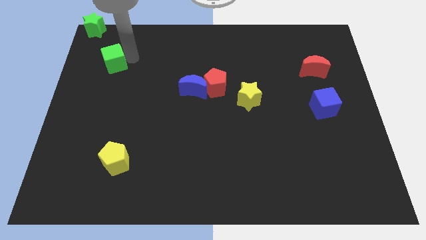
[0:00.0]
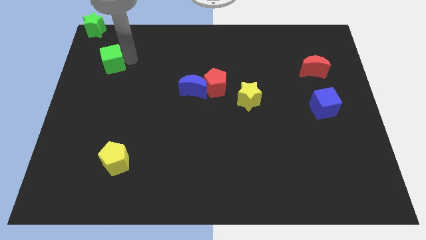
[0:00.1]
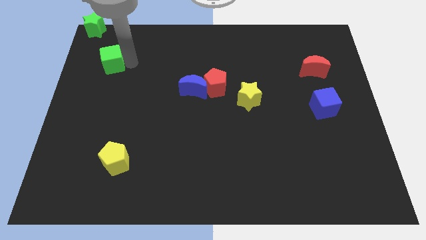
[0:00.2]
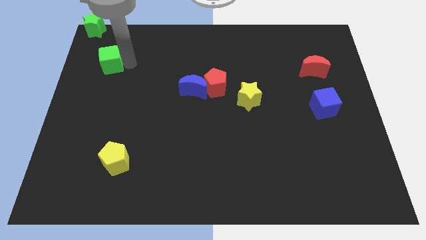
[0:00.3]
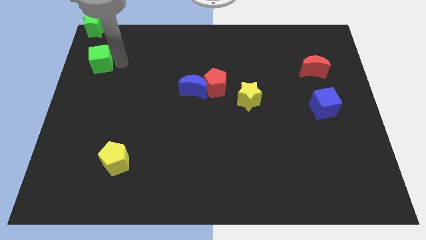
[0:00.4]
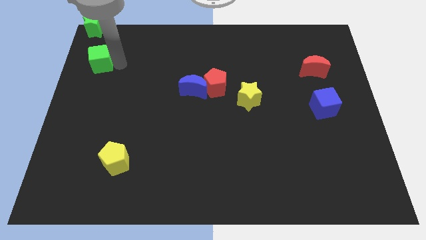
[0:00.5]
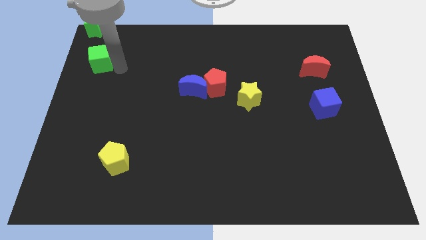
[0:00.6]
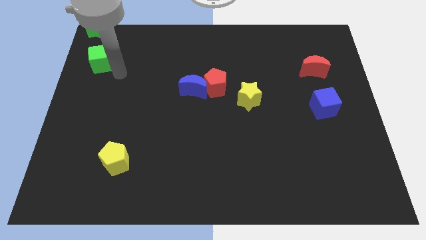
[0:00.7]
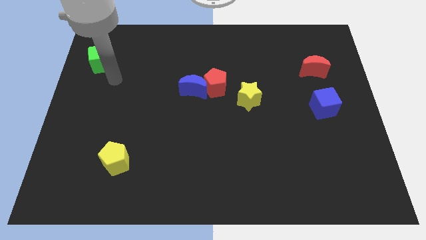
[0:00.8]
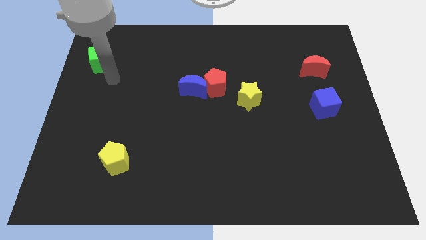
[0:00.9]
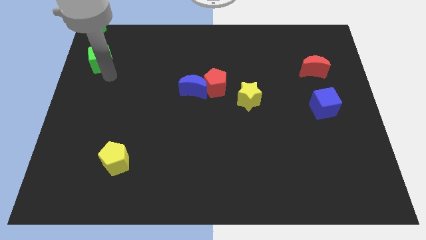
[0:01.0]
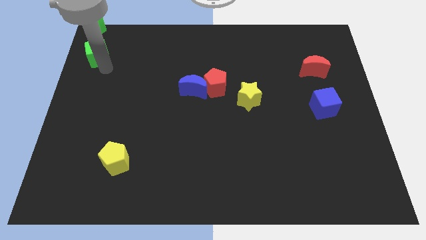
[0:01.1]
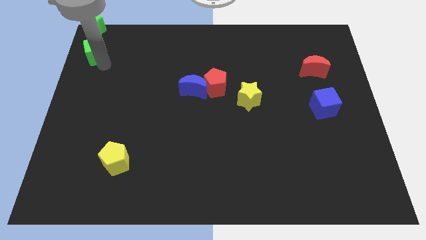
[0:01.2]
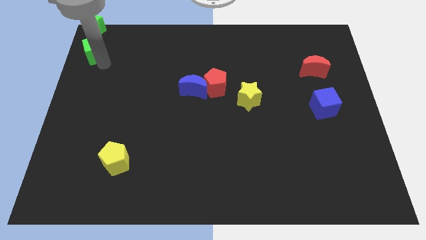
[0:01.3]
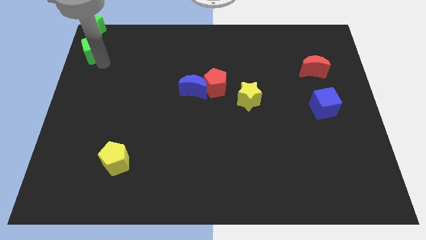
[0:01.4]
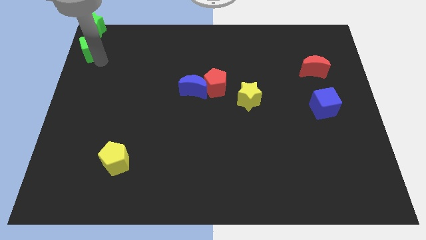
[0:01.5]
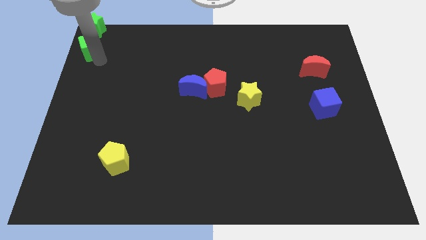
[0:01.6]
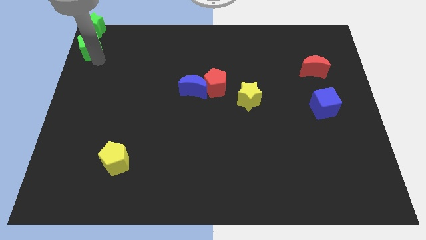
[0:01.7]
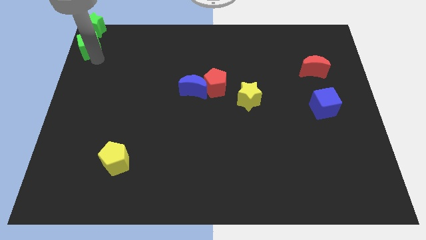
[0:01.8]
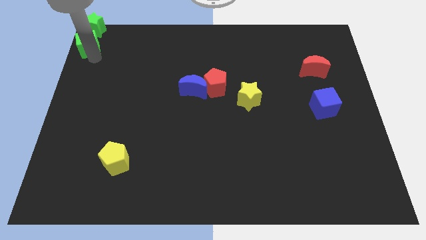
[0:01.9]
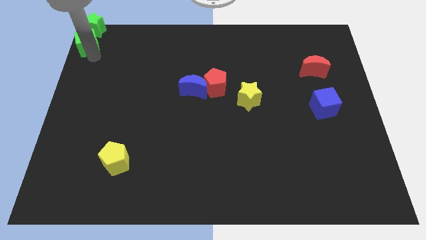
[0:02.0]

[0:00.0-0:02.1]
place the green cube vertically under the green star

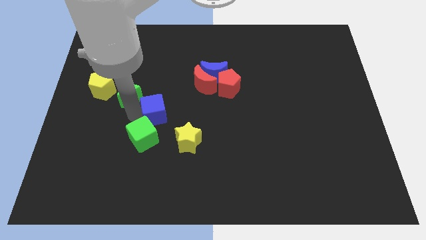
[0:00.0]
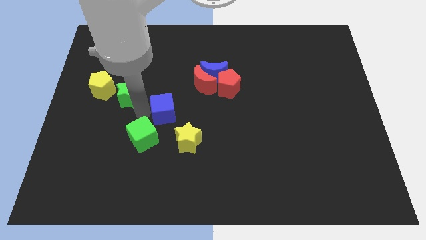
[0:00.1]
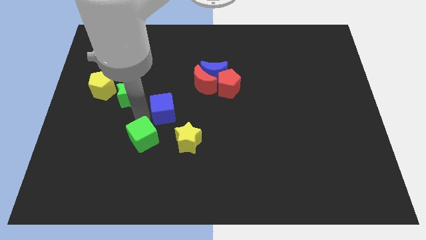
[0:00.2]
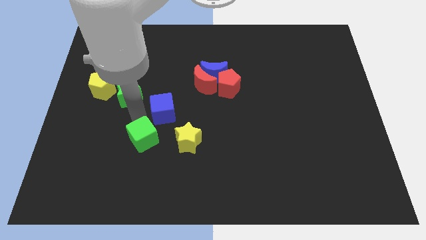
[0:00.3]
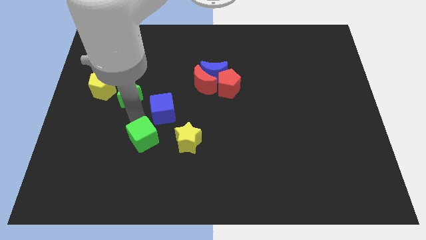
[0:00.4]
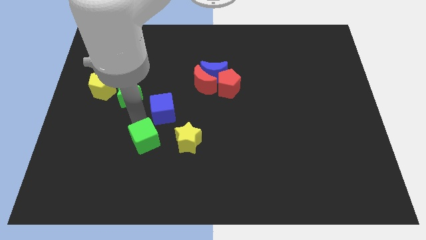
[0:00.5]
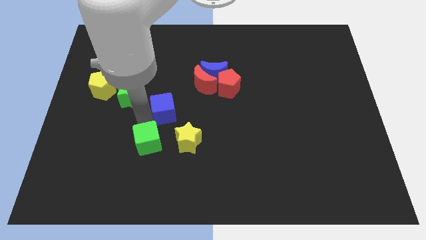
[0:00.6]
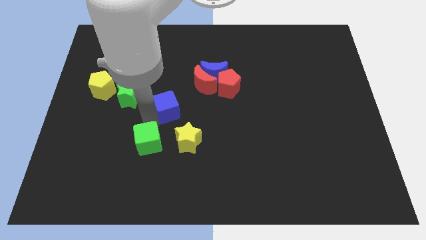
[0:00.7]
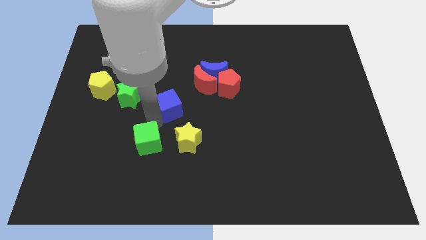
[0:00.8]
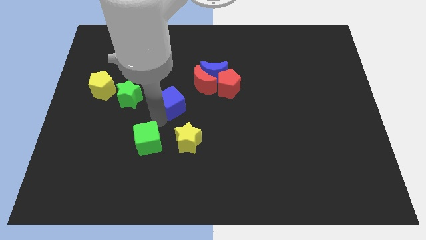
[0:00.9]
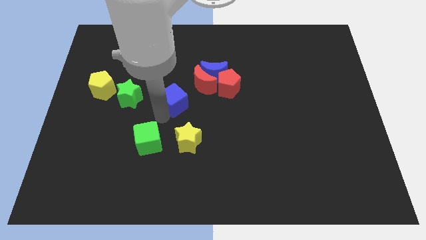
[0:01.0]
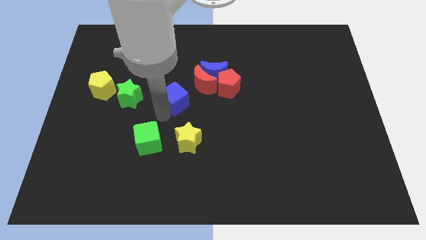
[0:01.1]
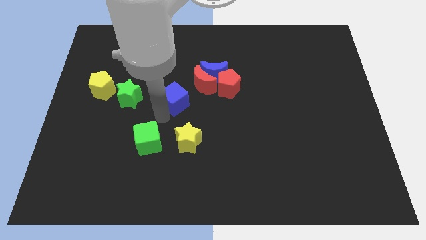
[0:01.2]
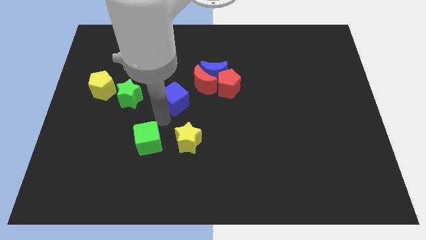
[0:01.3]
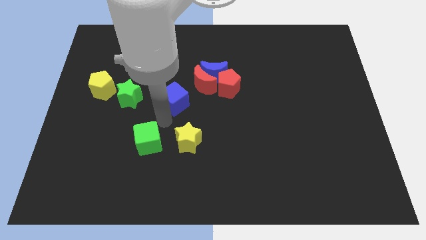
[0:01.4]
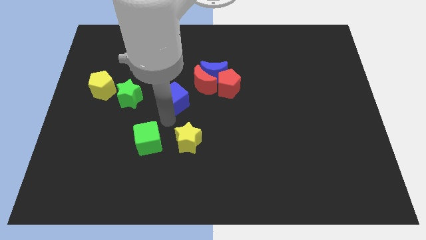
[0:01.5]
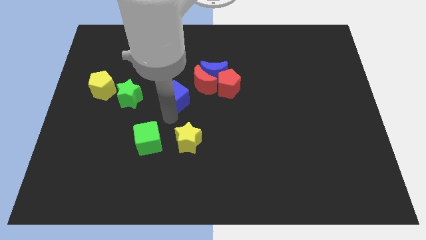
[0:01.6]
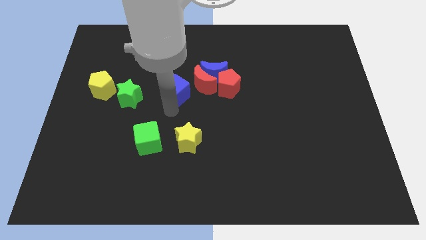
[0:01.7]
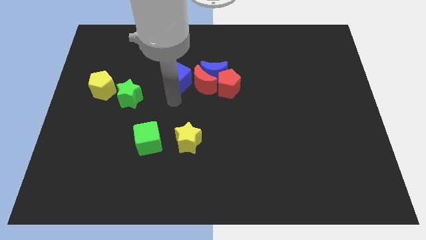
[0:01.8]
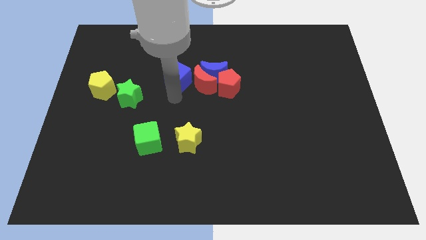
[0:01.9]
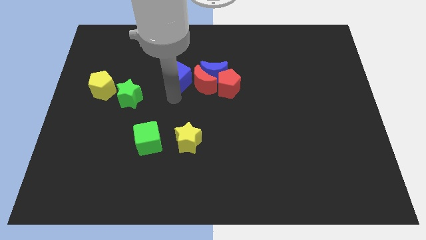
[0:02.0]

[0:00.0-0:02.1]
move the blue cube to the top of the red moon

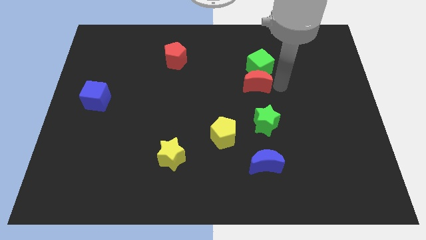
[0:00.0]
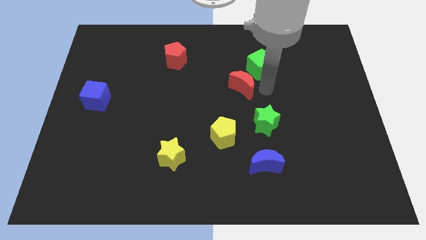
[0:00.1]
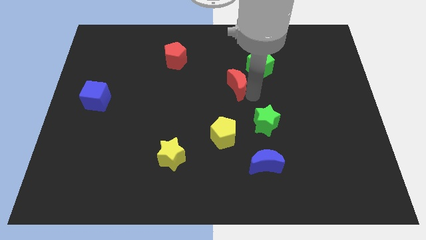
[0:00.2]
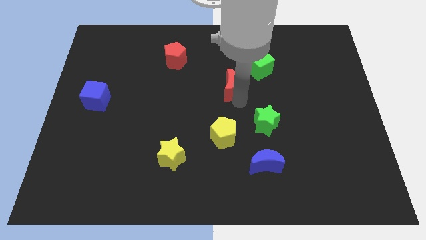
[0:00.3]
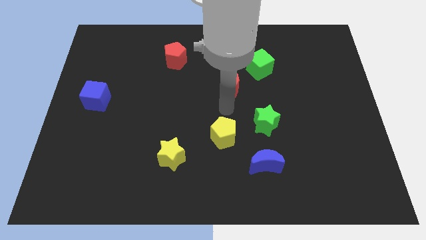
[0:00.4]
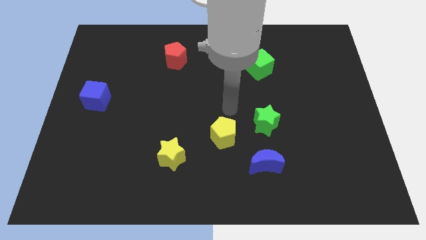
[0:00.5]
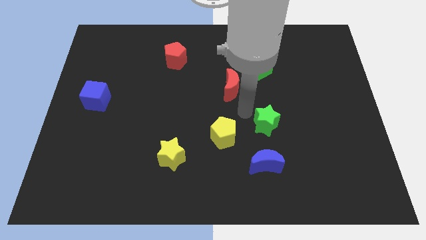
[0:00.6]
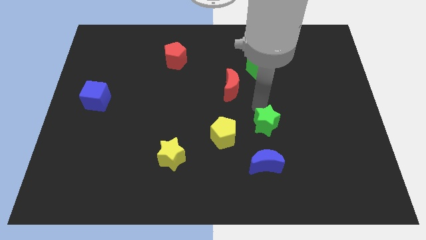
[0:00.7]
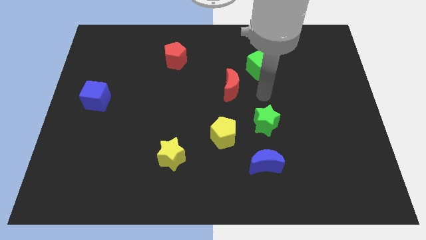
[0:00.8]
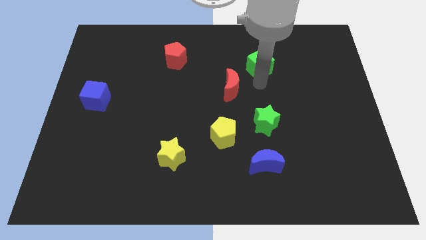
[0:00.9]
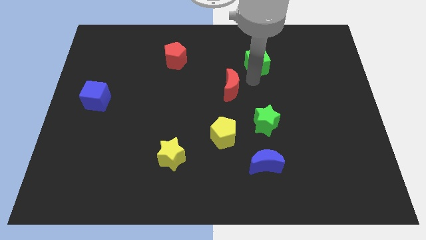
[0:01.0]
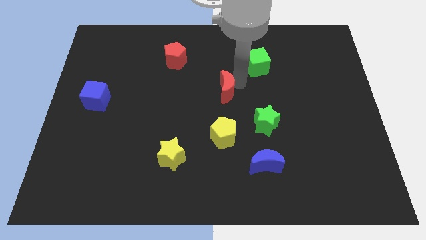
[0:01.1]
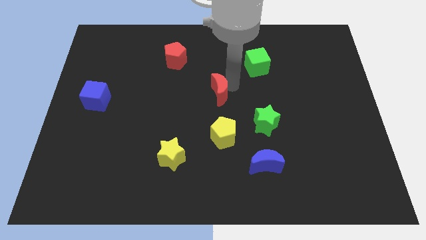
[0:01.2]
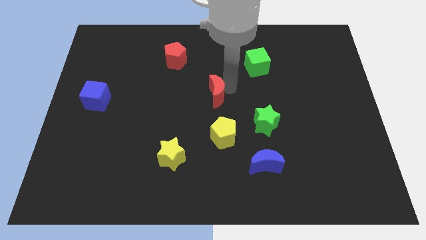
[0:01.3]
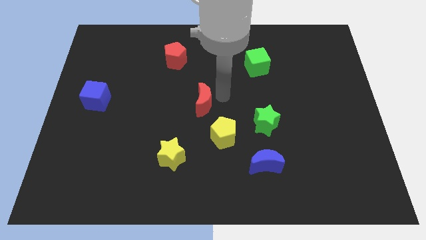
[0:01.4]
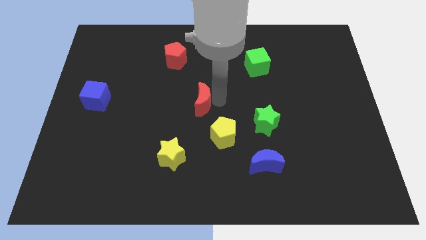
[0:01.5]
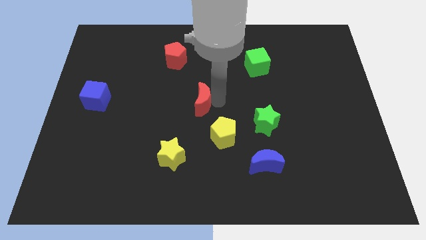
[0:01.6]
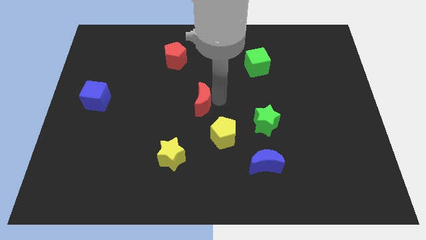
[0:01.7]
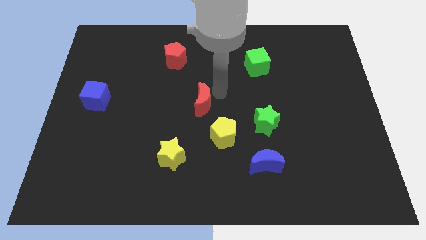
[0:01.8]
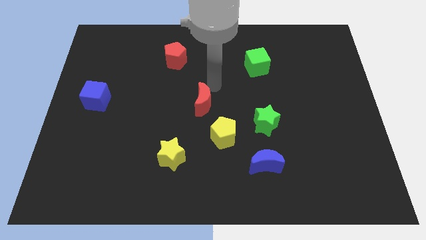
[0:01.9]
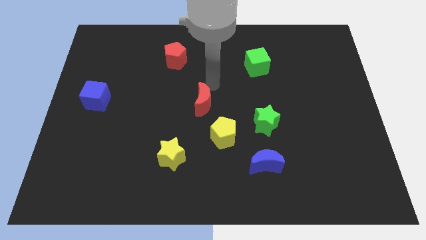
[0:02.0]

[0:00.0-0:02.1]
place red moon diagonal to yellow pentagon

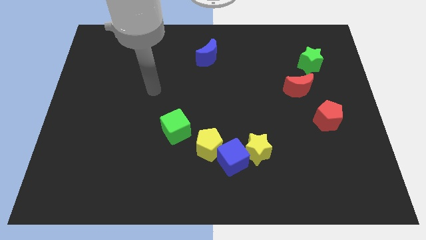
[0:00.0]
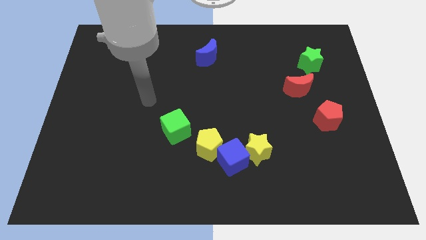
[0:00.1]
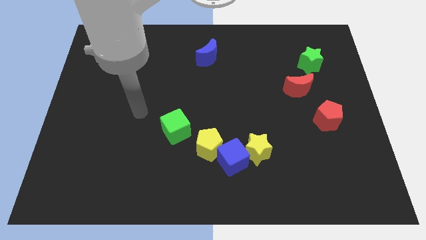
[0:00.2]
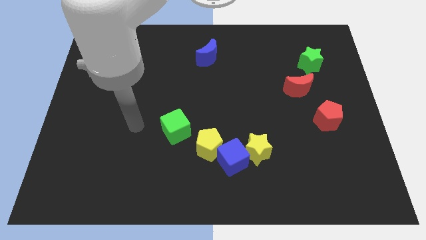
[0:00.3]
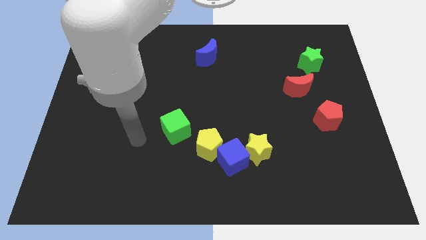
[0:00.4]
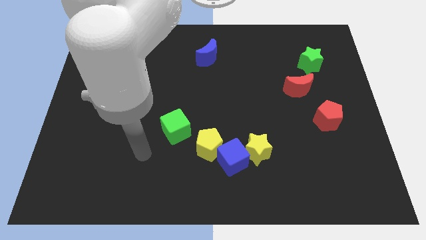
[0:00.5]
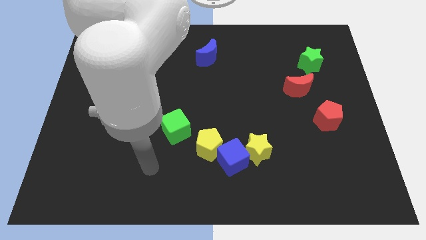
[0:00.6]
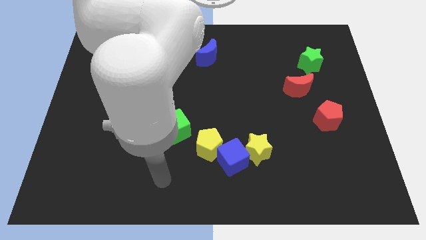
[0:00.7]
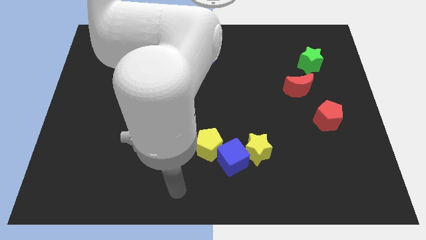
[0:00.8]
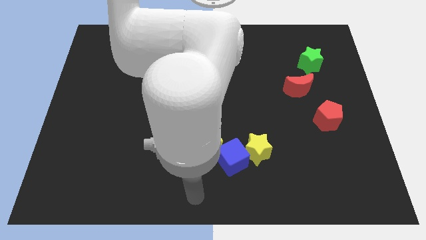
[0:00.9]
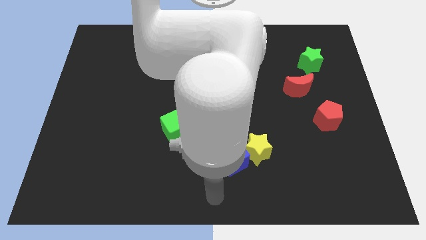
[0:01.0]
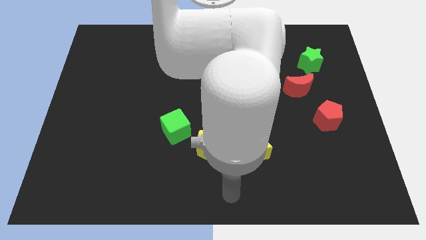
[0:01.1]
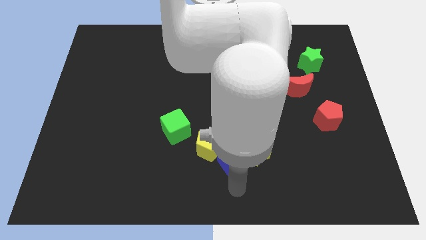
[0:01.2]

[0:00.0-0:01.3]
move the arm below to the blue cube

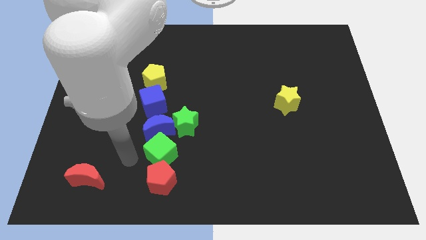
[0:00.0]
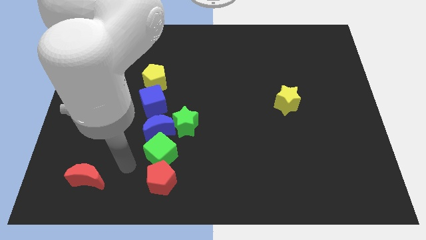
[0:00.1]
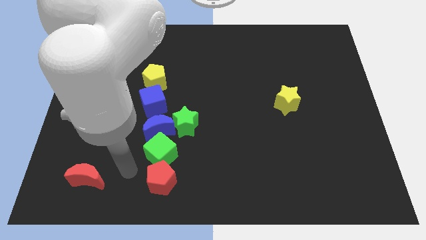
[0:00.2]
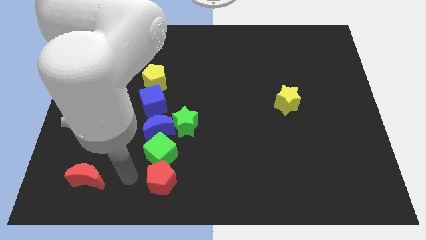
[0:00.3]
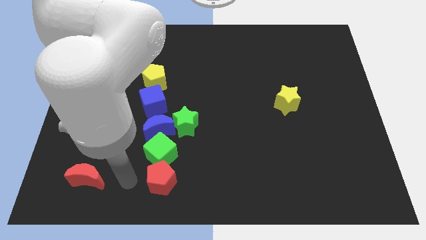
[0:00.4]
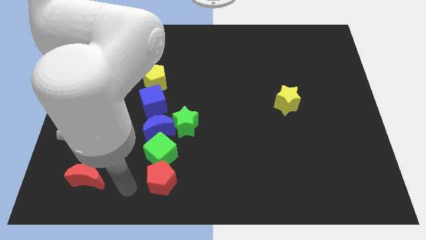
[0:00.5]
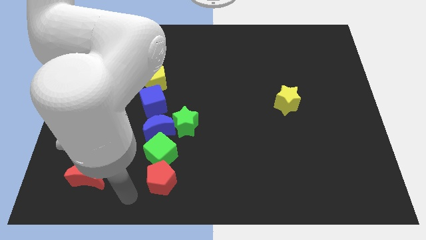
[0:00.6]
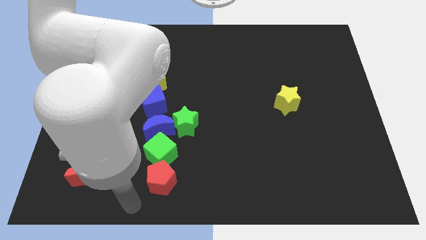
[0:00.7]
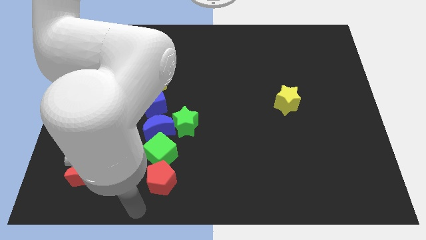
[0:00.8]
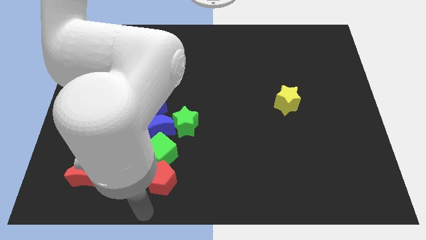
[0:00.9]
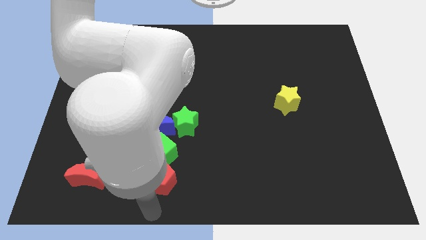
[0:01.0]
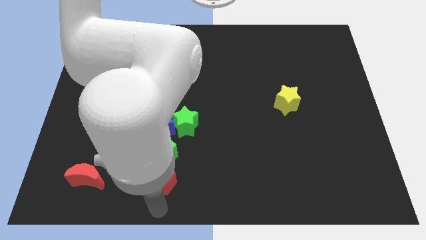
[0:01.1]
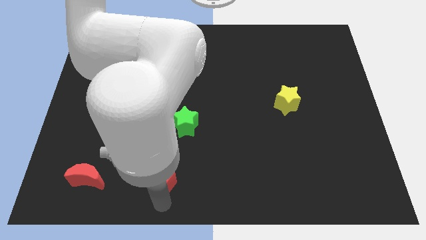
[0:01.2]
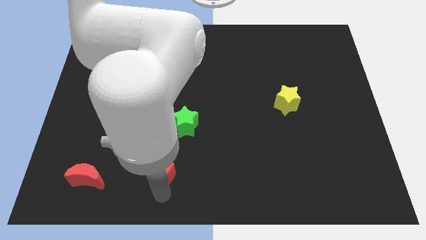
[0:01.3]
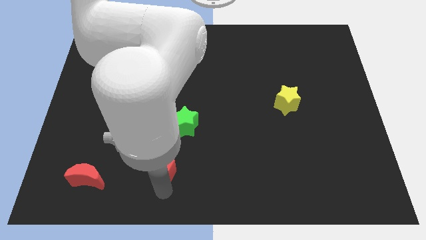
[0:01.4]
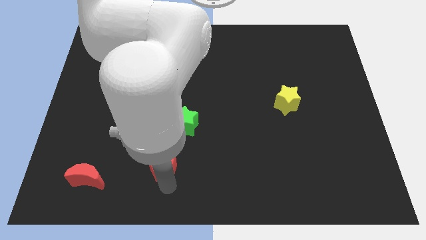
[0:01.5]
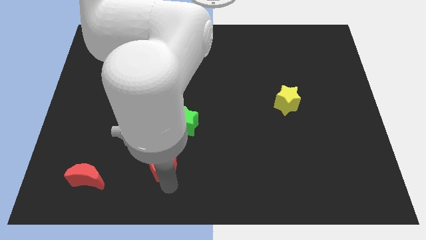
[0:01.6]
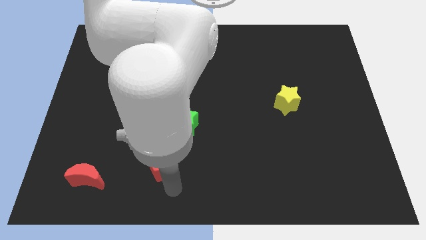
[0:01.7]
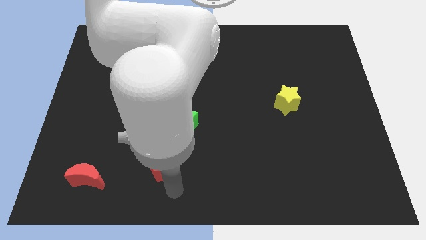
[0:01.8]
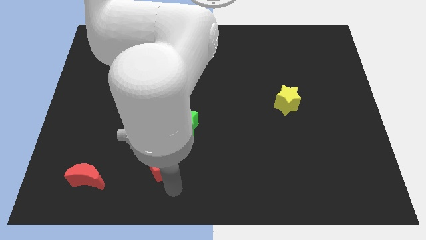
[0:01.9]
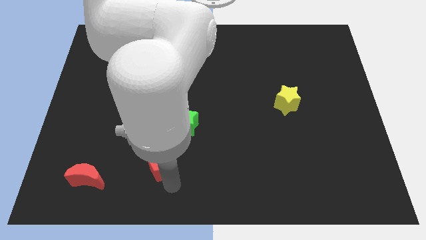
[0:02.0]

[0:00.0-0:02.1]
move arm below the red pentagon
